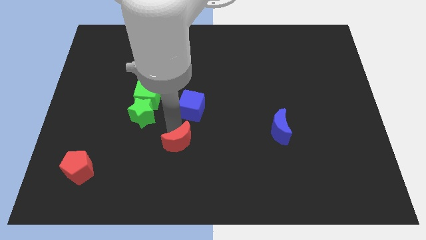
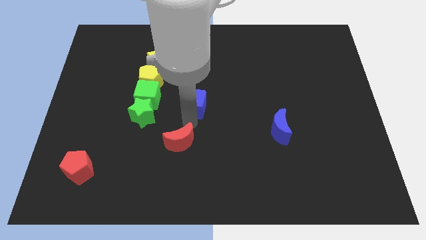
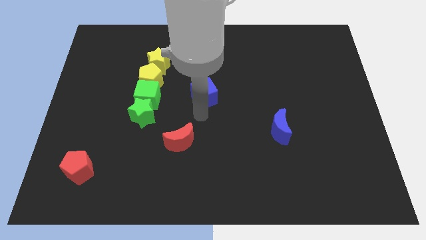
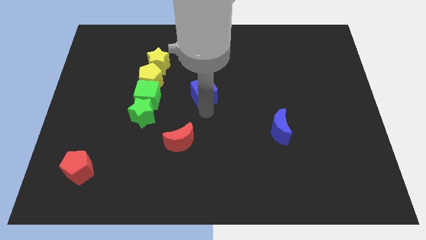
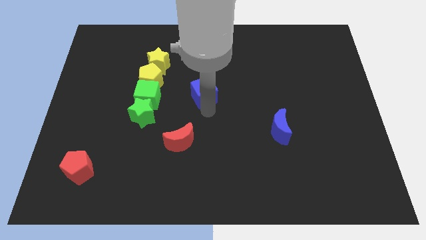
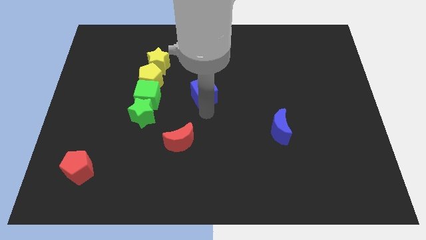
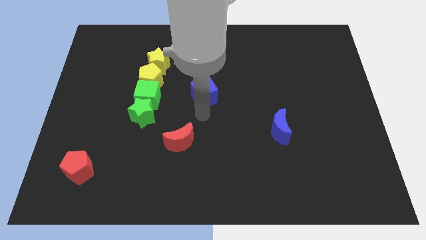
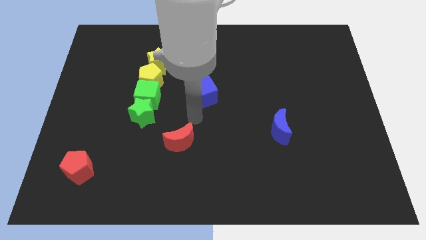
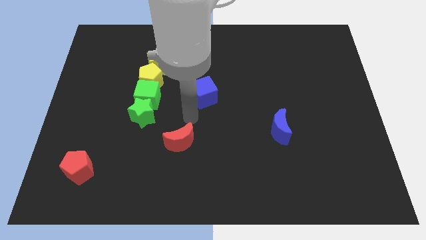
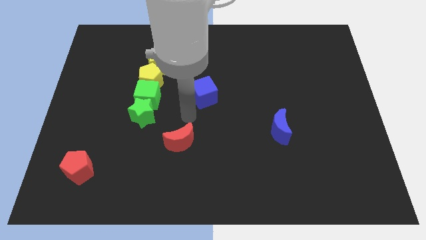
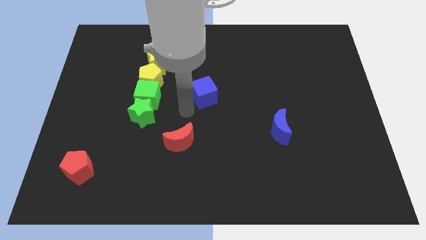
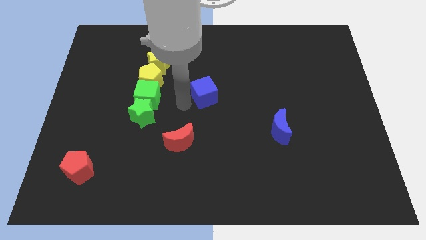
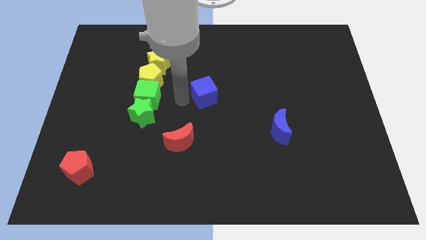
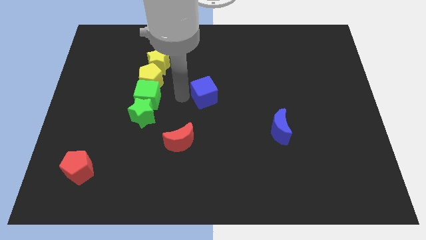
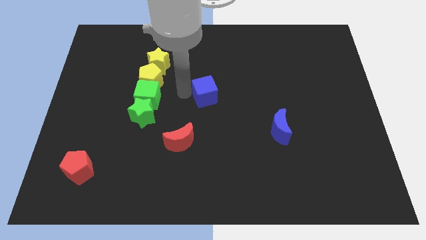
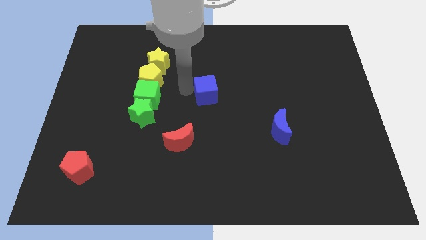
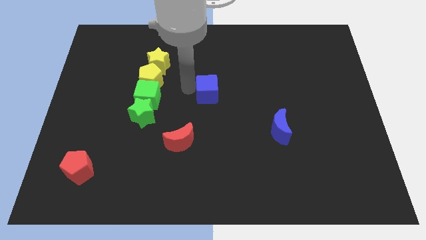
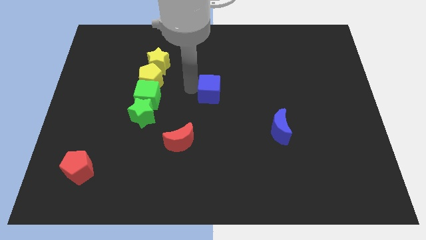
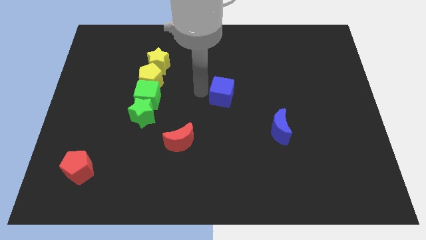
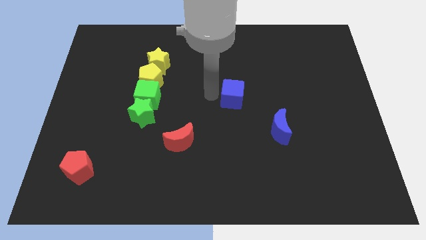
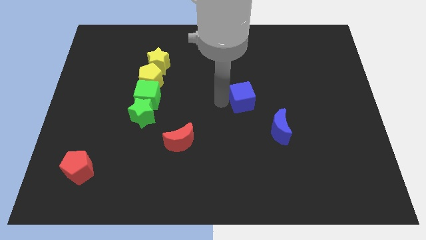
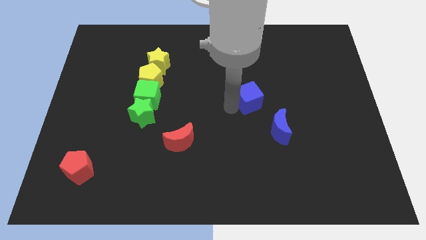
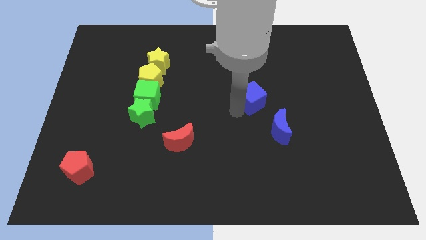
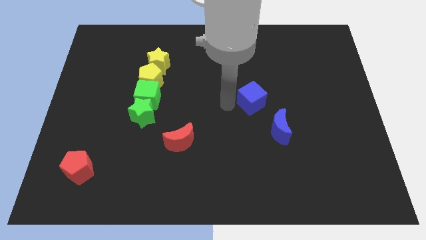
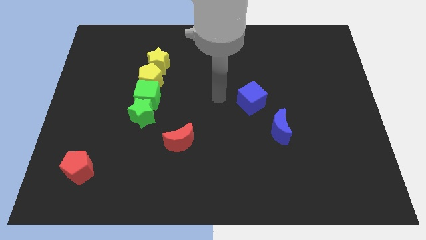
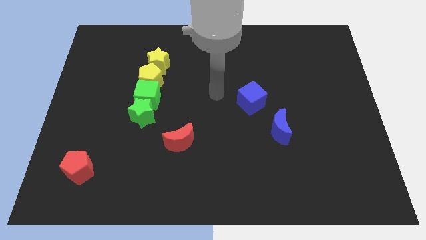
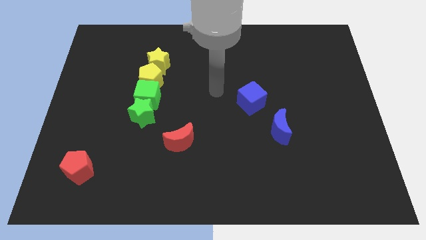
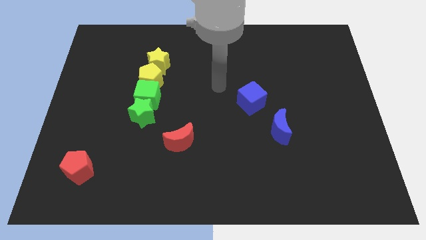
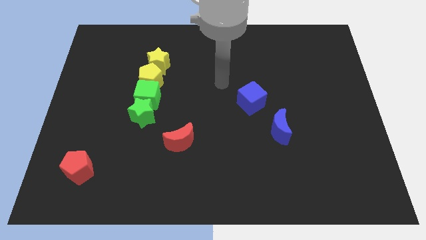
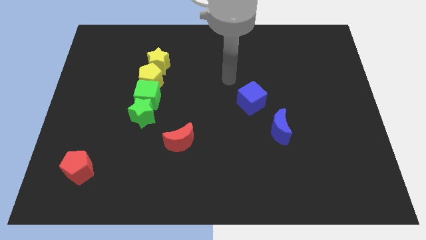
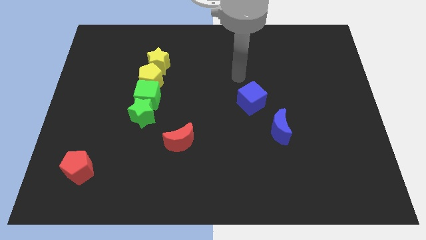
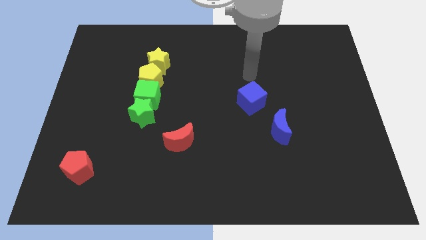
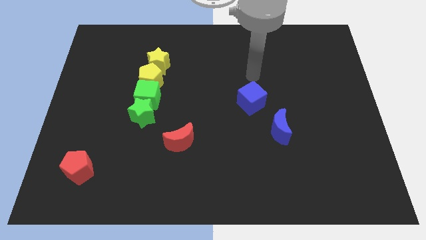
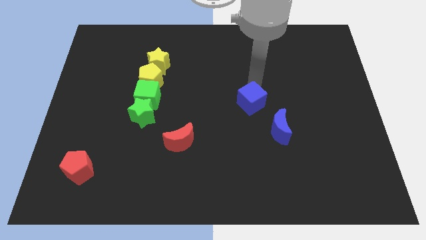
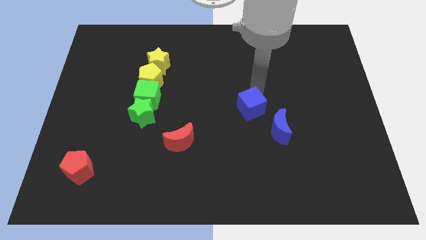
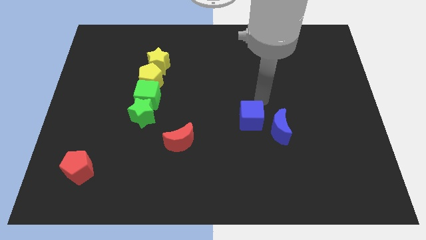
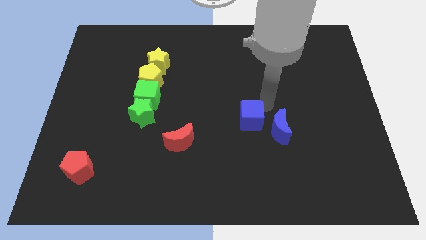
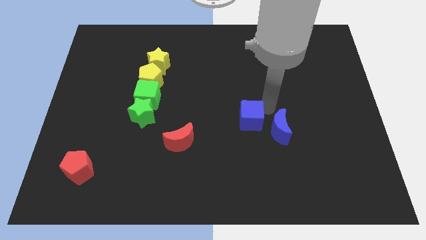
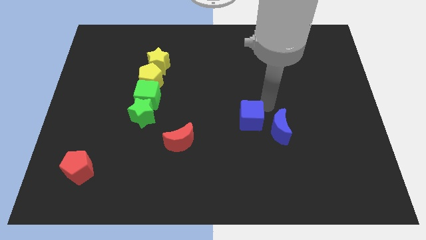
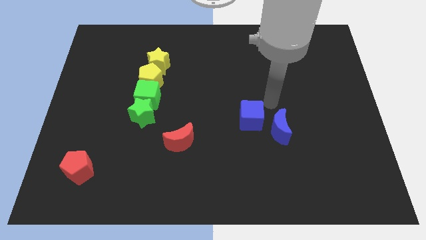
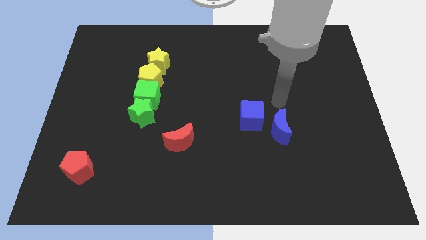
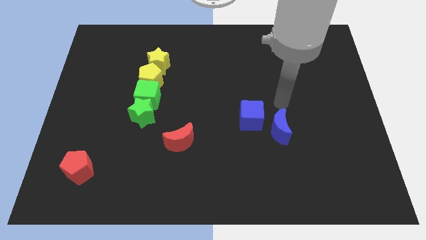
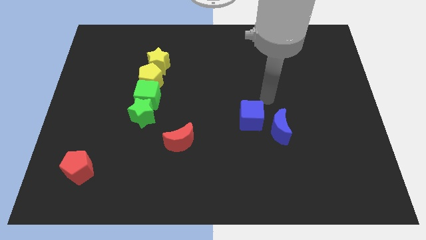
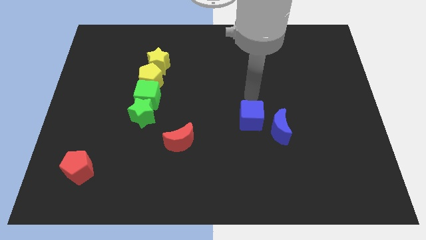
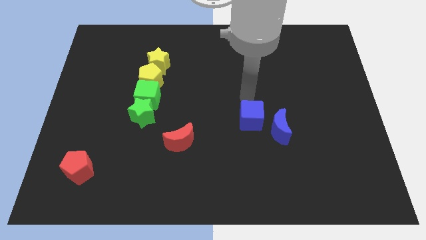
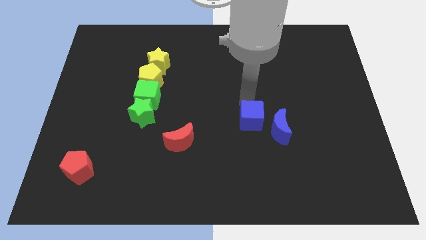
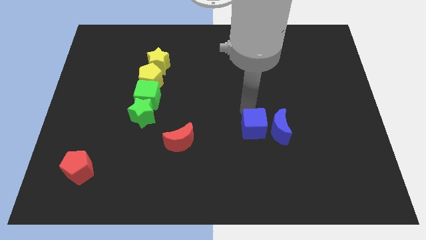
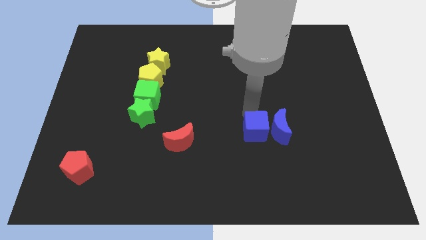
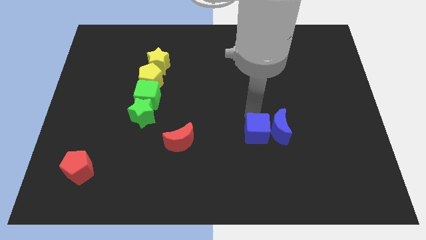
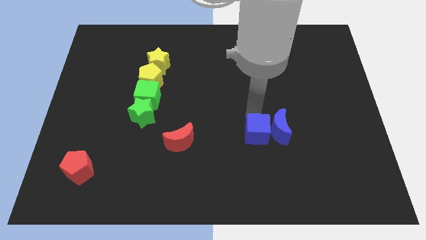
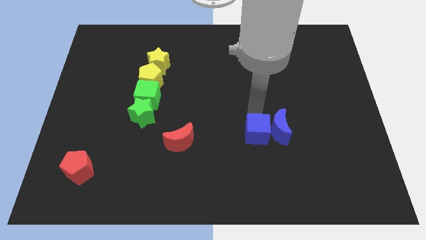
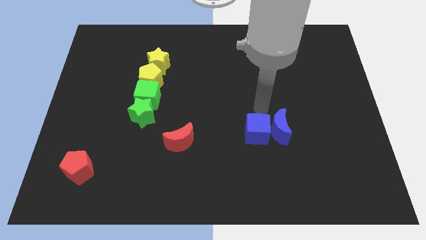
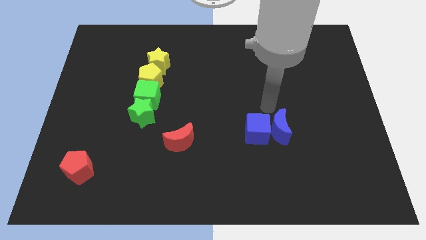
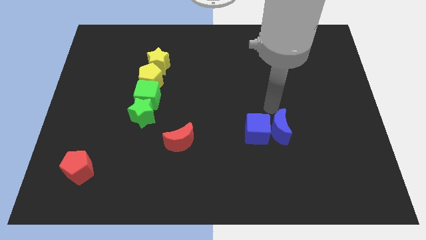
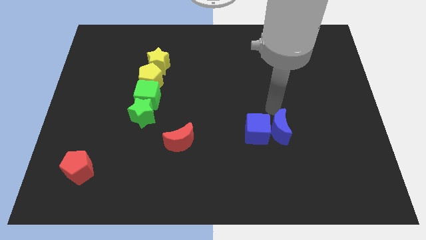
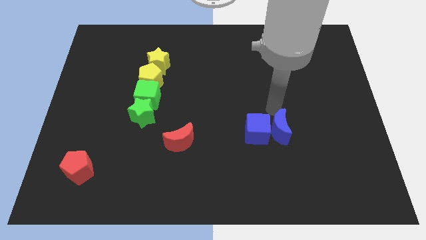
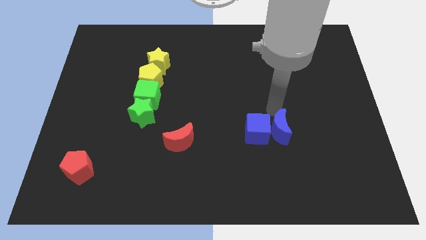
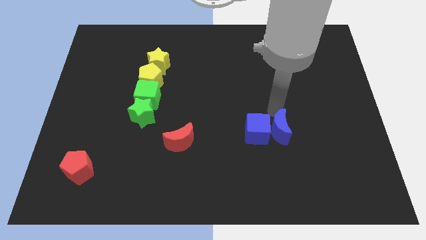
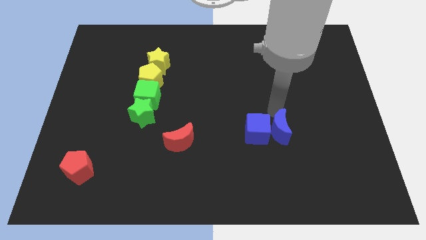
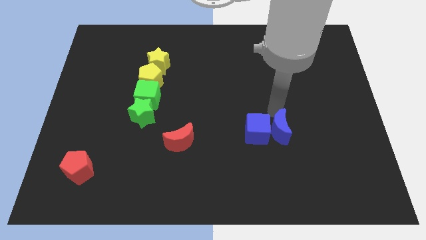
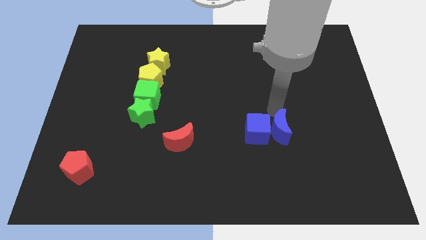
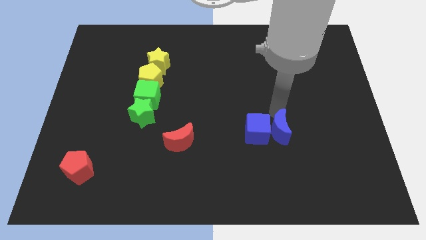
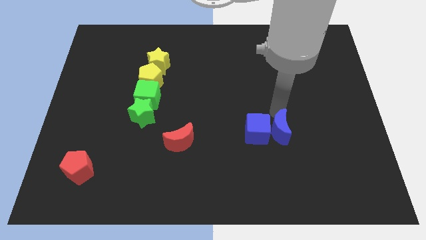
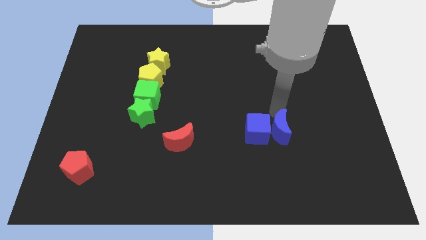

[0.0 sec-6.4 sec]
push the blue cube to the left of the blue crescent

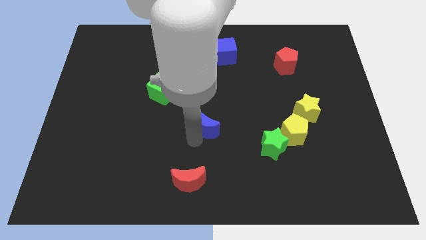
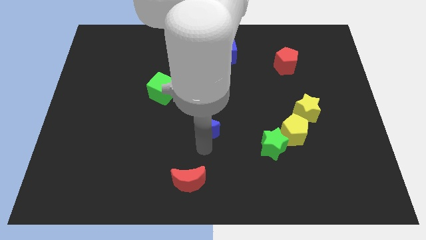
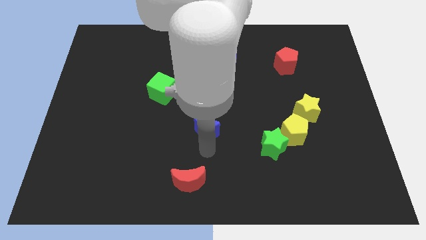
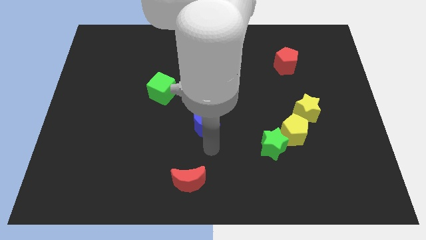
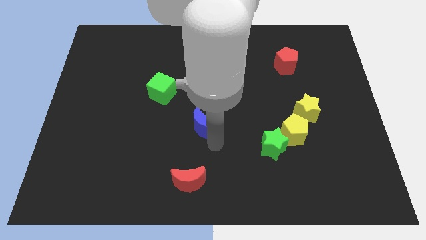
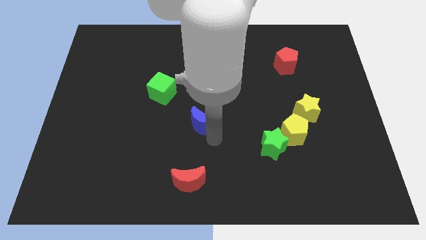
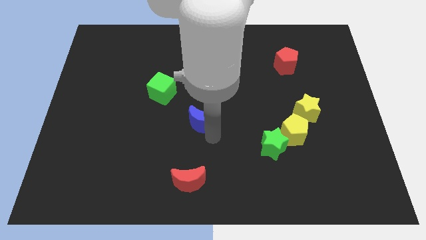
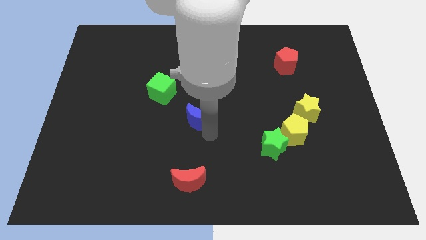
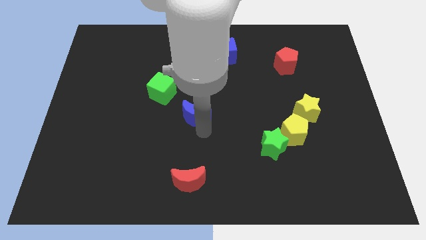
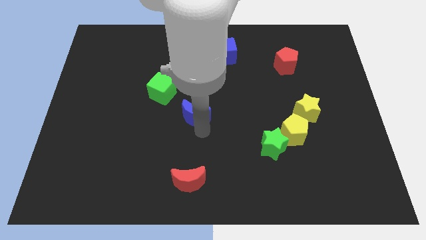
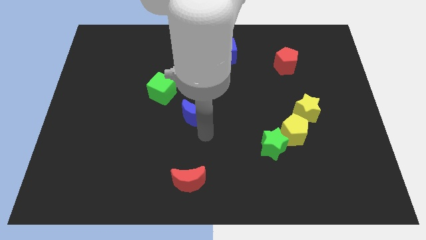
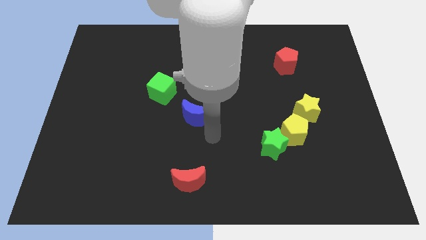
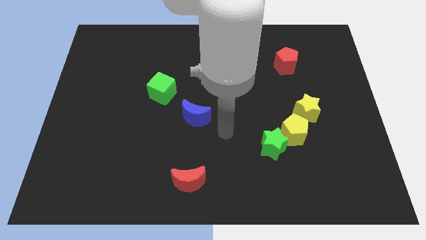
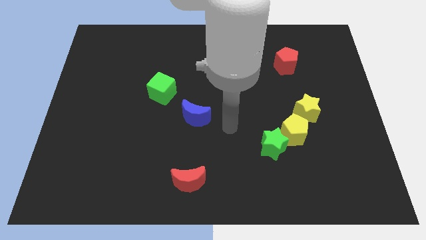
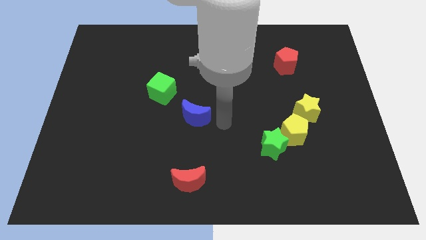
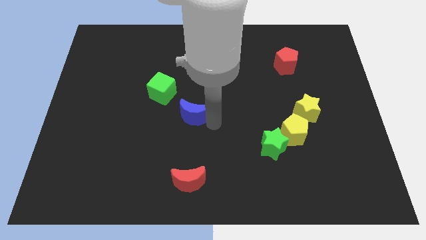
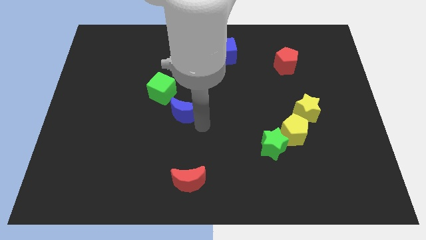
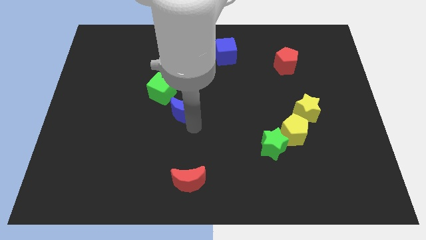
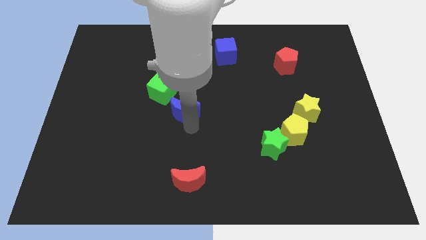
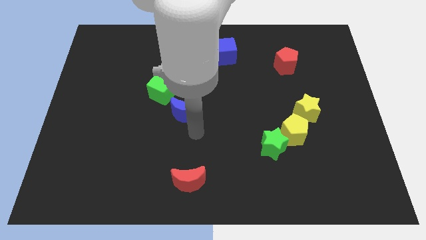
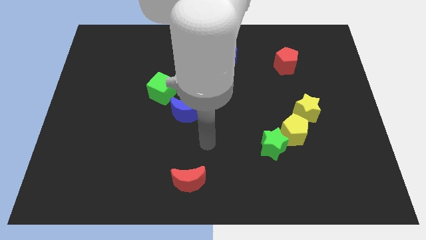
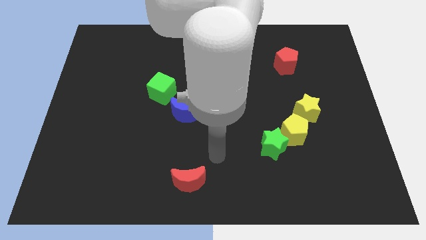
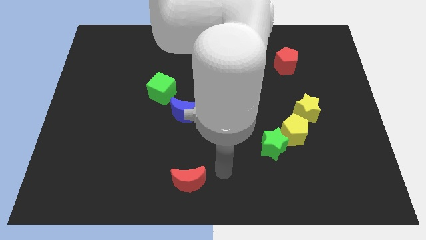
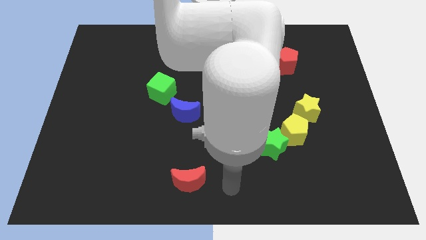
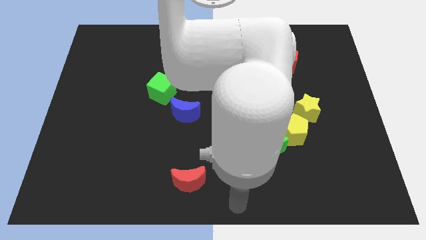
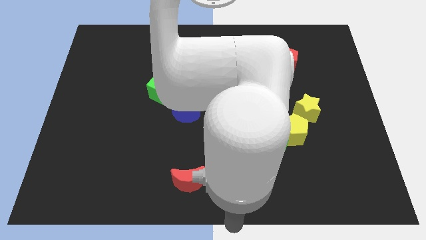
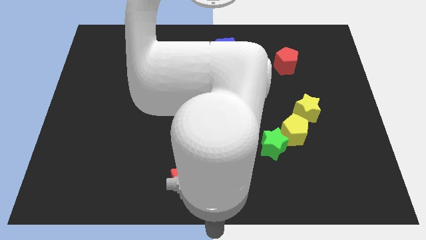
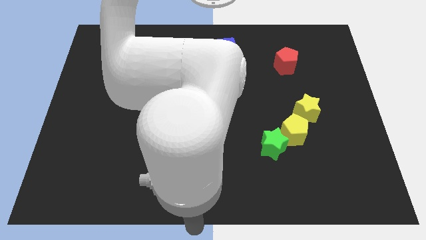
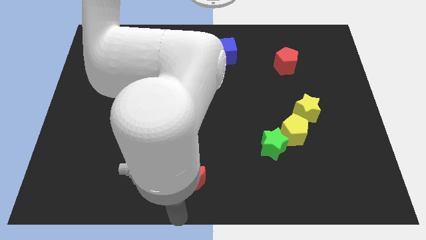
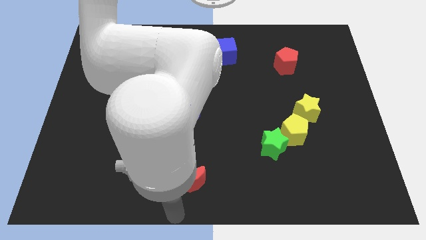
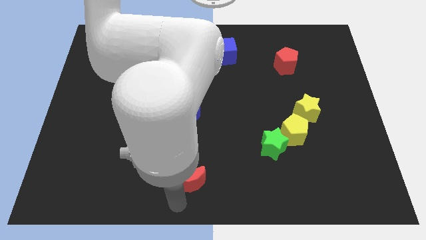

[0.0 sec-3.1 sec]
move the blue moon near to the green cube
